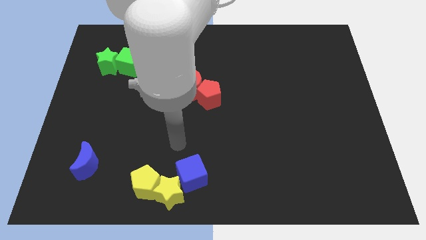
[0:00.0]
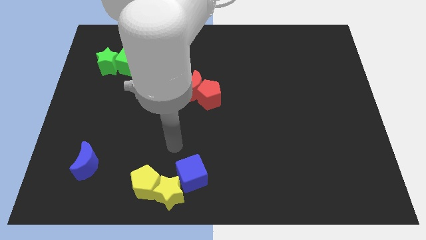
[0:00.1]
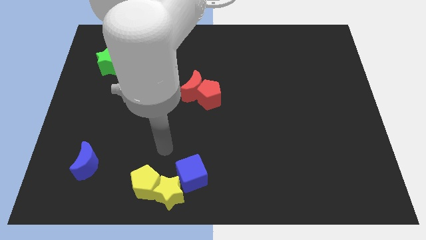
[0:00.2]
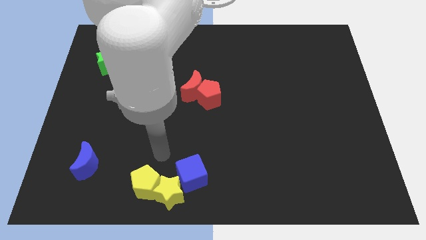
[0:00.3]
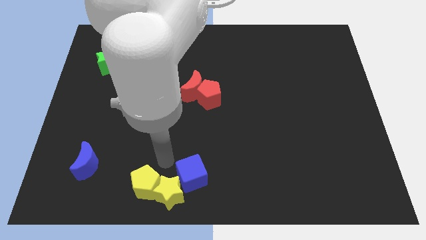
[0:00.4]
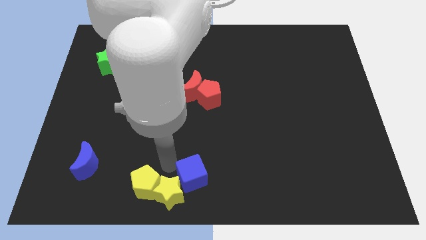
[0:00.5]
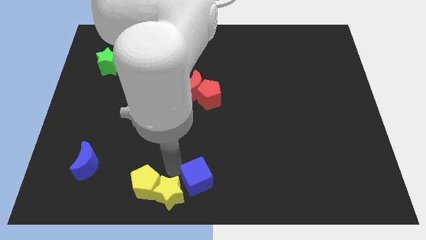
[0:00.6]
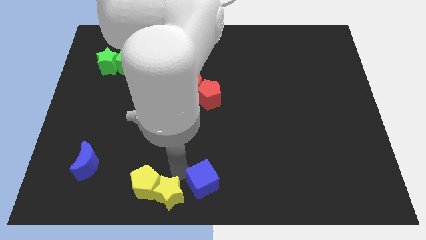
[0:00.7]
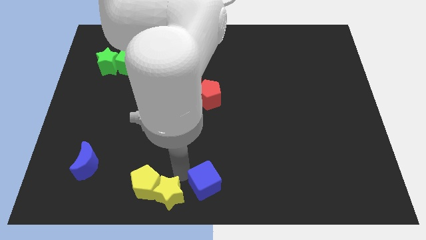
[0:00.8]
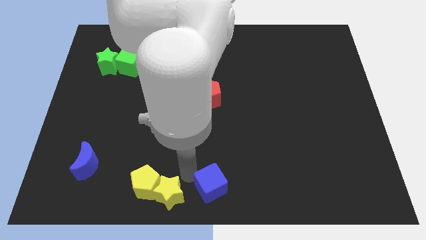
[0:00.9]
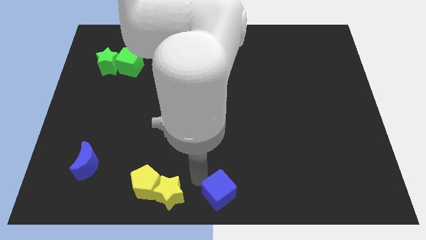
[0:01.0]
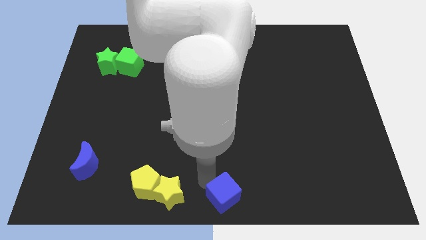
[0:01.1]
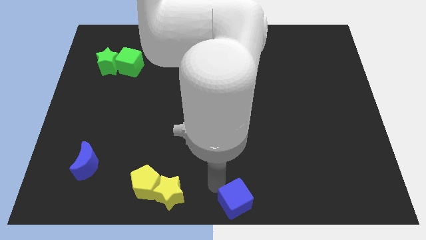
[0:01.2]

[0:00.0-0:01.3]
place the blue cube at bottom center of the board

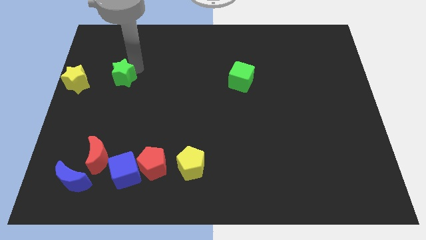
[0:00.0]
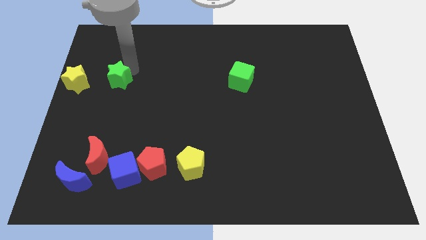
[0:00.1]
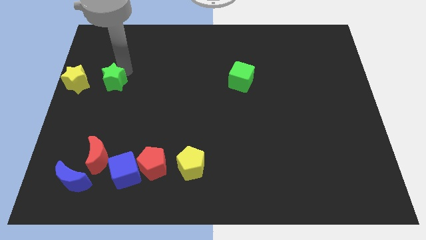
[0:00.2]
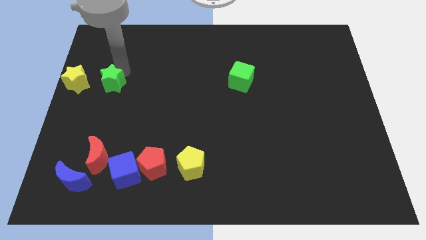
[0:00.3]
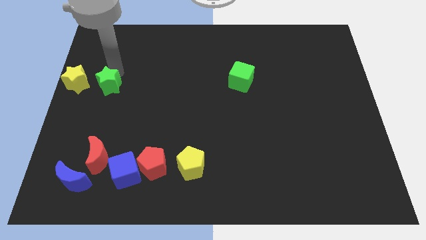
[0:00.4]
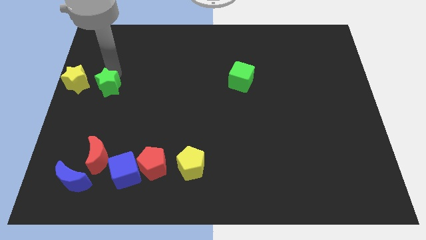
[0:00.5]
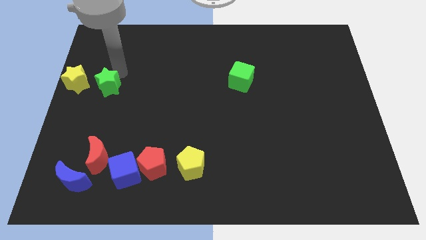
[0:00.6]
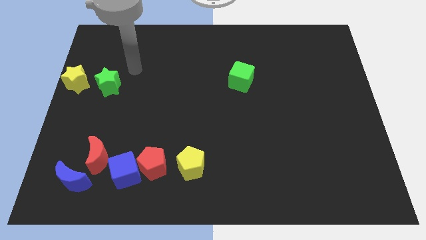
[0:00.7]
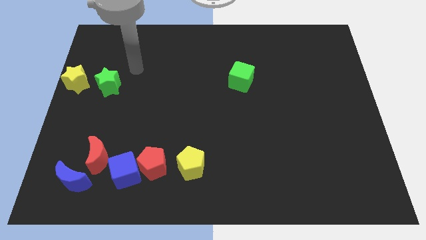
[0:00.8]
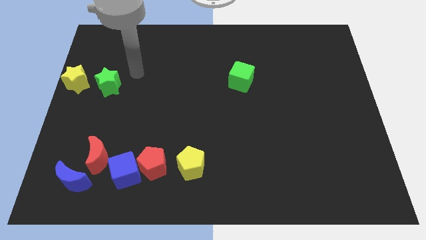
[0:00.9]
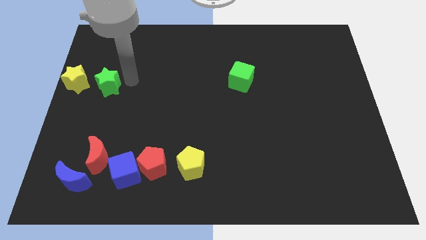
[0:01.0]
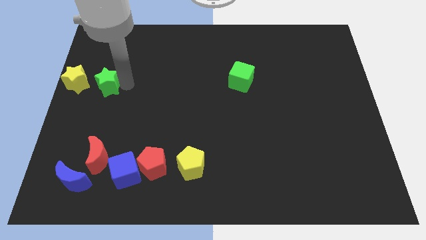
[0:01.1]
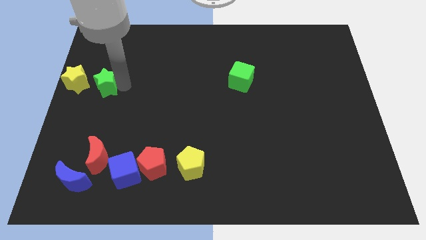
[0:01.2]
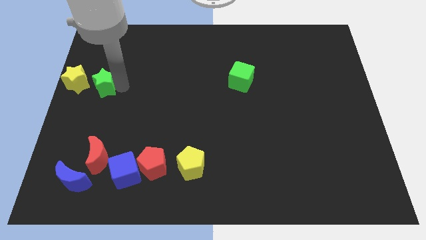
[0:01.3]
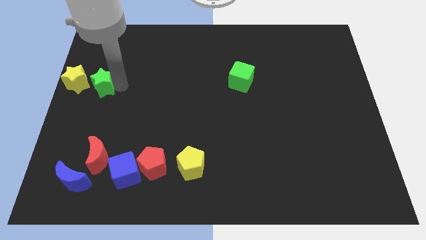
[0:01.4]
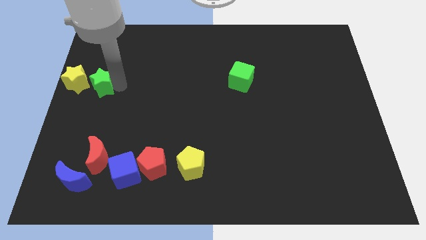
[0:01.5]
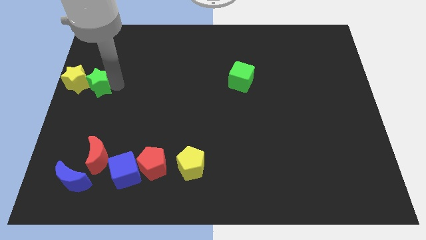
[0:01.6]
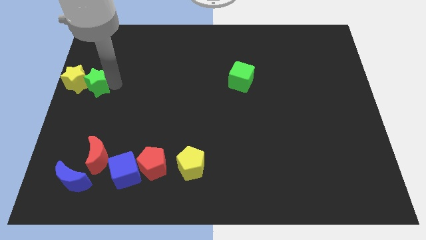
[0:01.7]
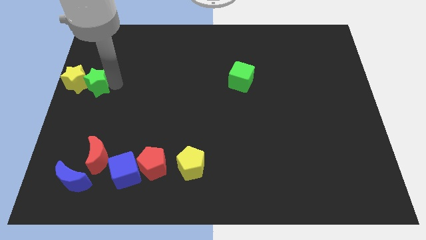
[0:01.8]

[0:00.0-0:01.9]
move the green star into right side of the yellow star

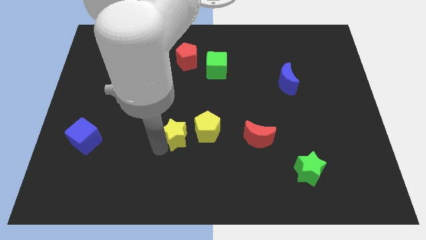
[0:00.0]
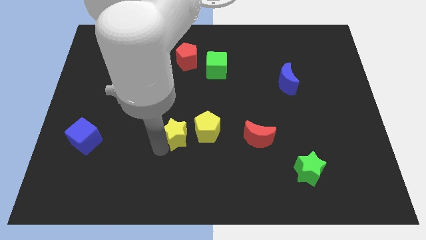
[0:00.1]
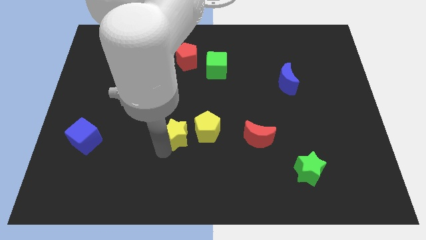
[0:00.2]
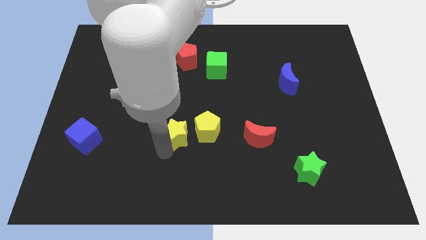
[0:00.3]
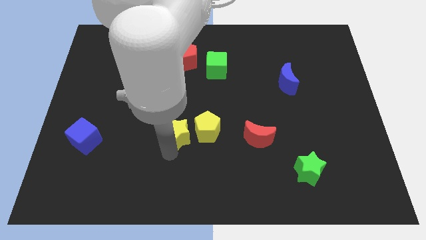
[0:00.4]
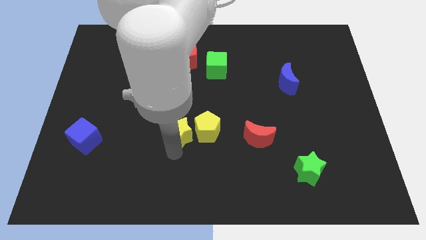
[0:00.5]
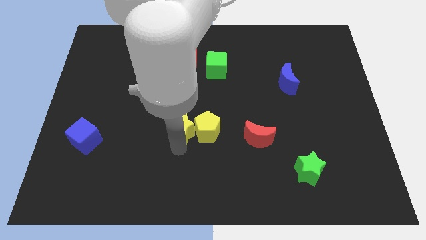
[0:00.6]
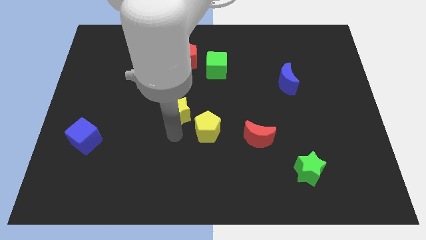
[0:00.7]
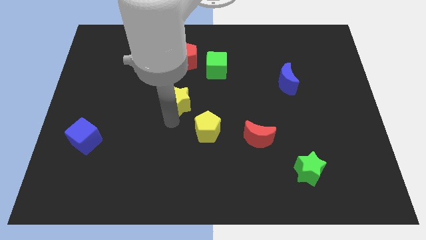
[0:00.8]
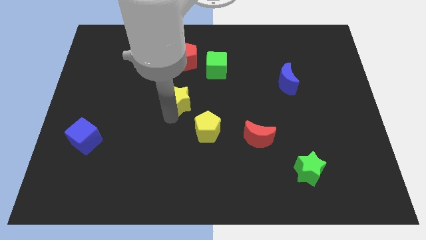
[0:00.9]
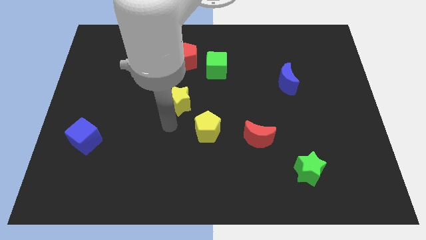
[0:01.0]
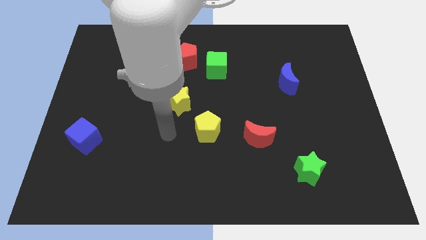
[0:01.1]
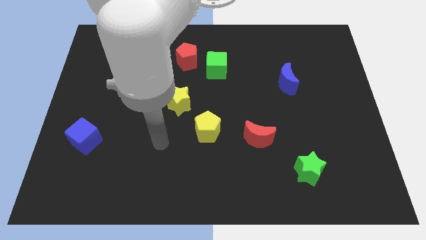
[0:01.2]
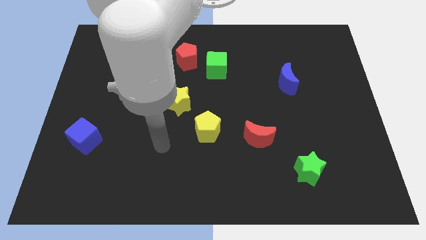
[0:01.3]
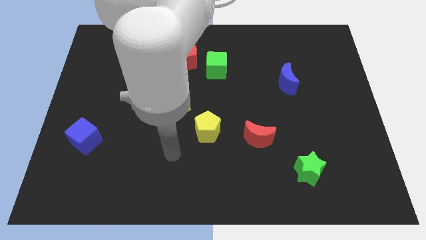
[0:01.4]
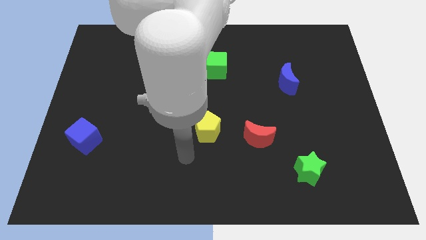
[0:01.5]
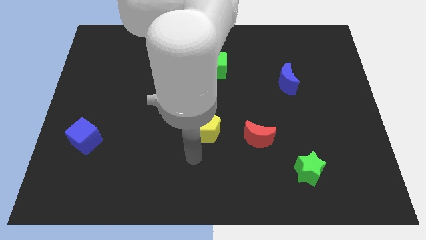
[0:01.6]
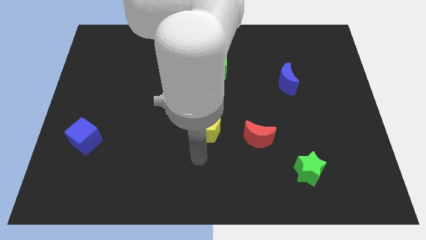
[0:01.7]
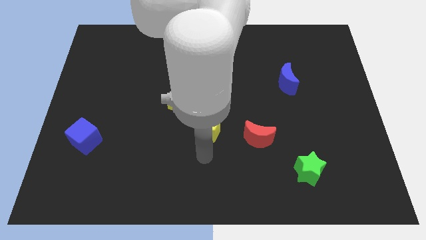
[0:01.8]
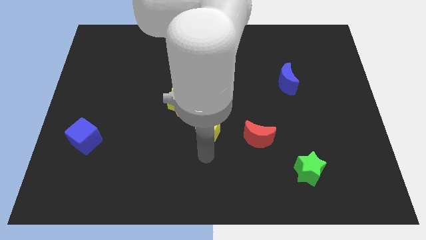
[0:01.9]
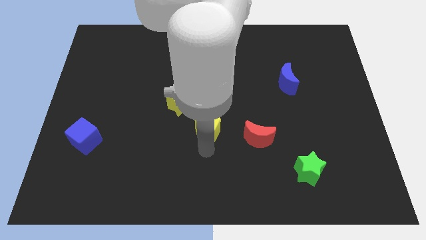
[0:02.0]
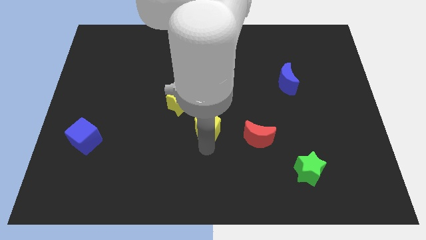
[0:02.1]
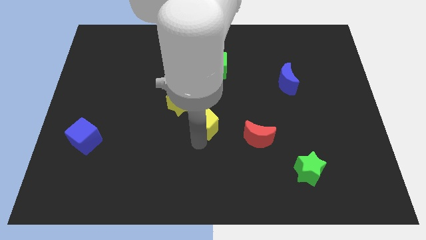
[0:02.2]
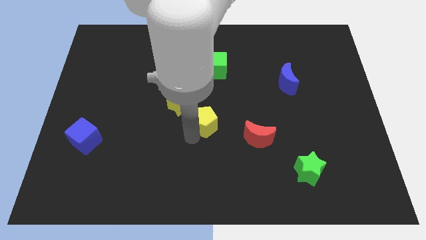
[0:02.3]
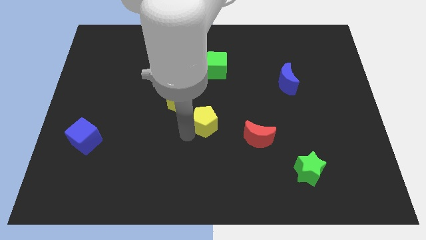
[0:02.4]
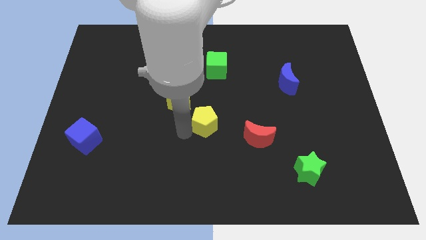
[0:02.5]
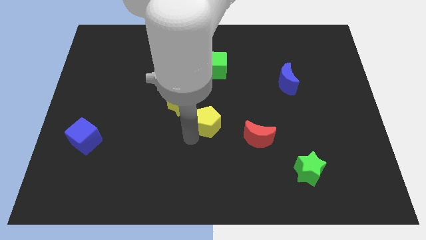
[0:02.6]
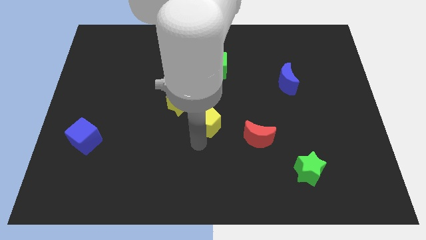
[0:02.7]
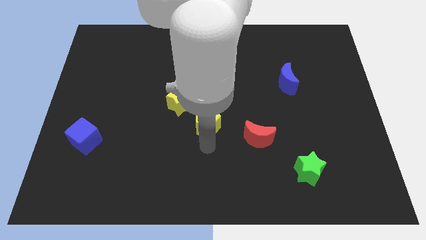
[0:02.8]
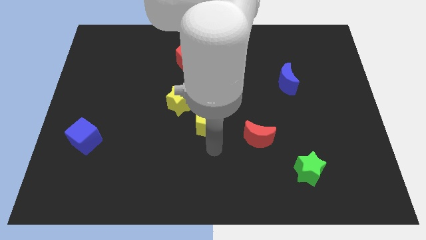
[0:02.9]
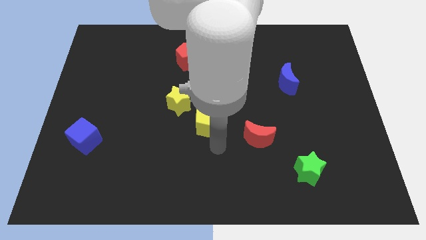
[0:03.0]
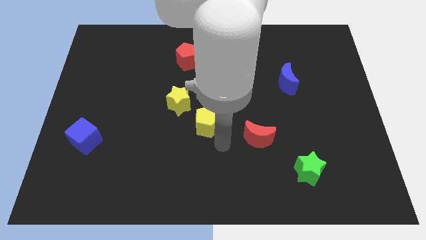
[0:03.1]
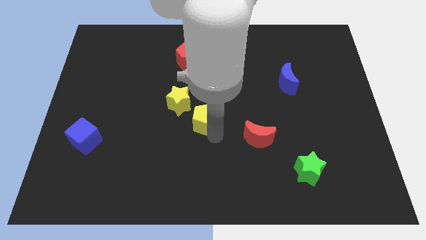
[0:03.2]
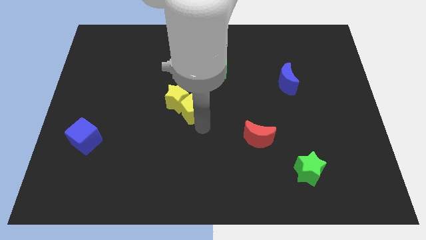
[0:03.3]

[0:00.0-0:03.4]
push the yellow pentagon into the yellow star

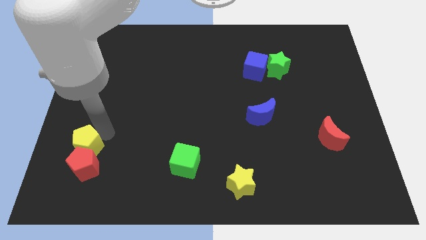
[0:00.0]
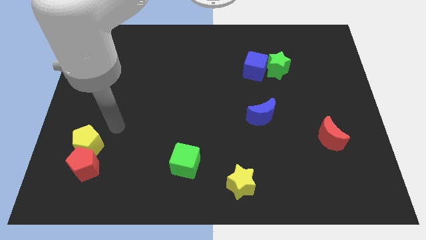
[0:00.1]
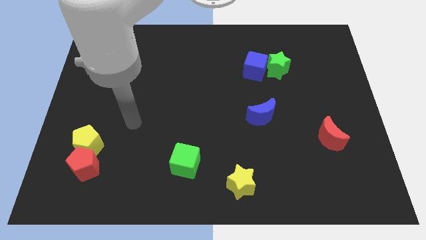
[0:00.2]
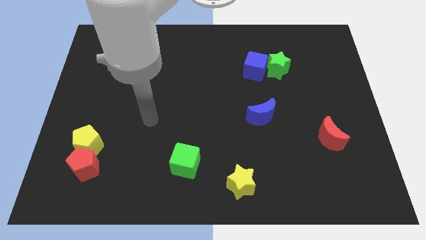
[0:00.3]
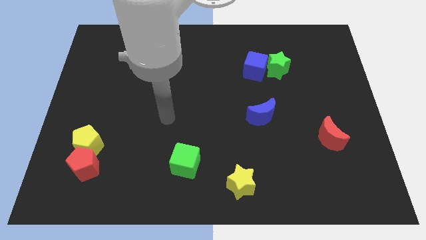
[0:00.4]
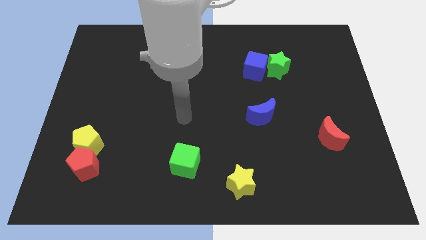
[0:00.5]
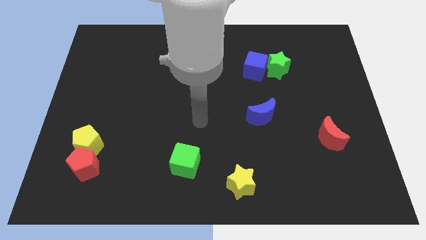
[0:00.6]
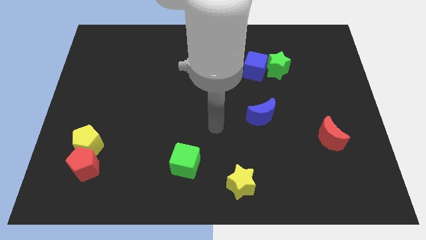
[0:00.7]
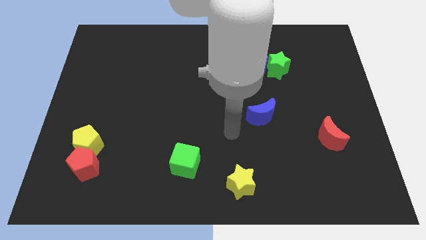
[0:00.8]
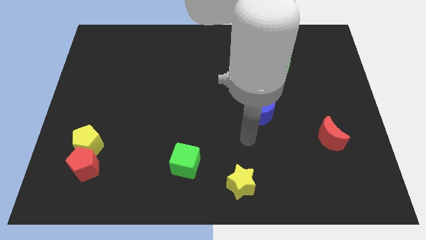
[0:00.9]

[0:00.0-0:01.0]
move your arm away from yellow pentagon

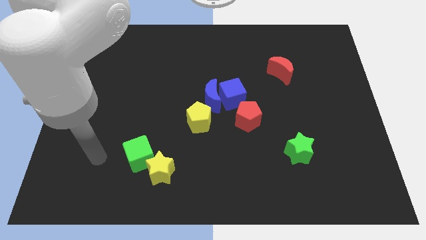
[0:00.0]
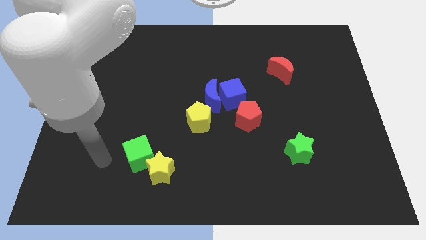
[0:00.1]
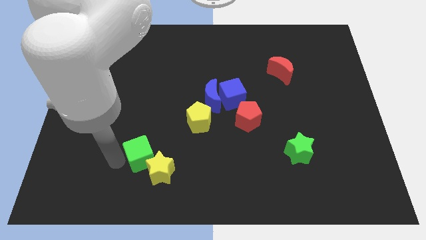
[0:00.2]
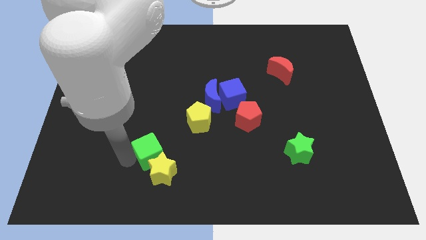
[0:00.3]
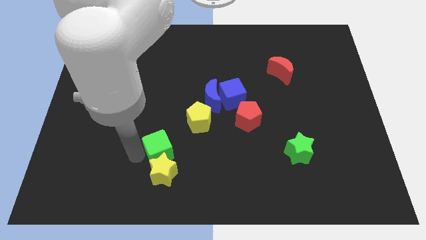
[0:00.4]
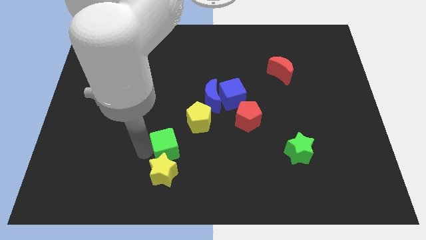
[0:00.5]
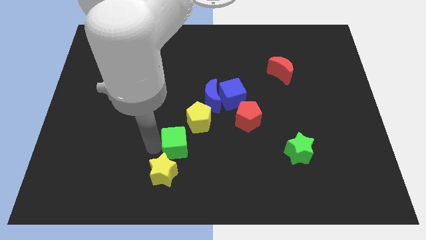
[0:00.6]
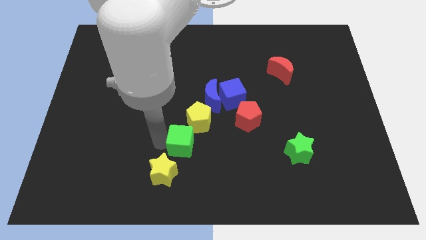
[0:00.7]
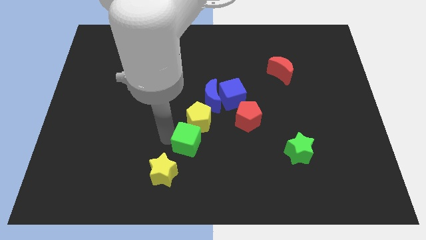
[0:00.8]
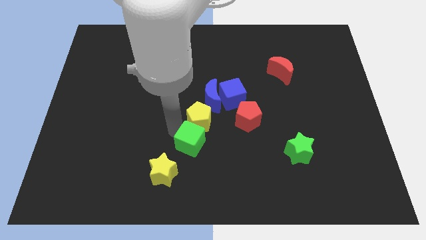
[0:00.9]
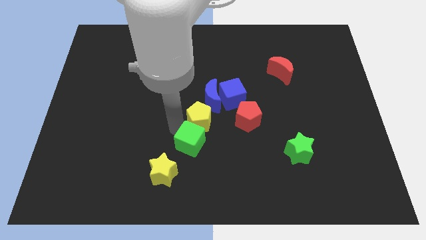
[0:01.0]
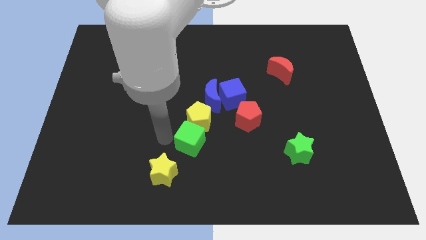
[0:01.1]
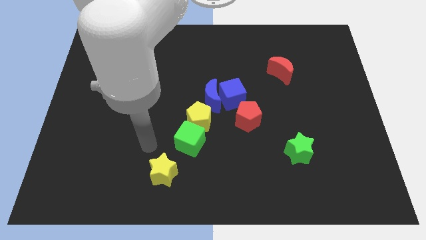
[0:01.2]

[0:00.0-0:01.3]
push the green cube into the yellow pentagon

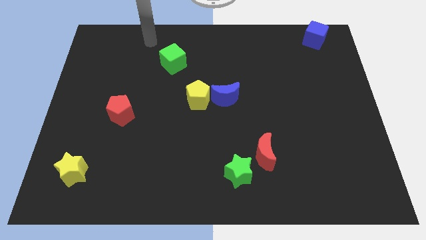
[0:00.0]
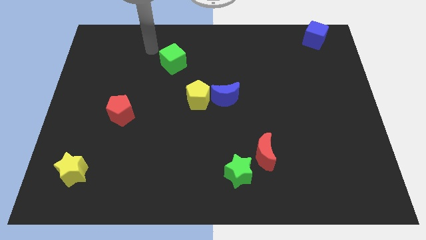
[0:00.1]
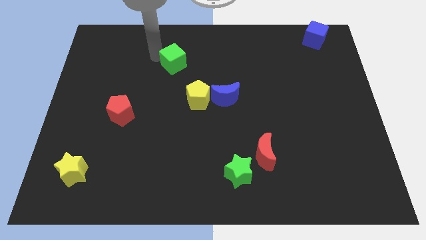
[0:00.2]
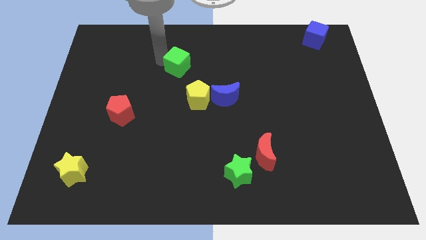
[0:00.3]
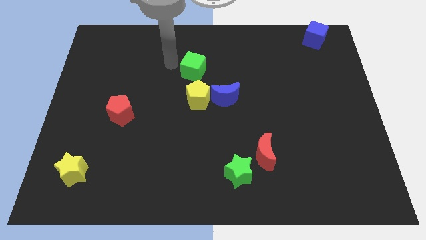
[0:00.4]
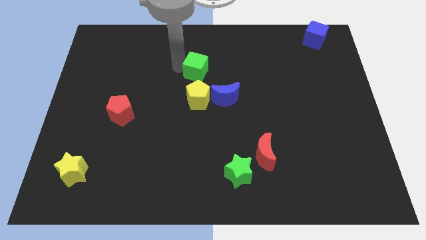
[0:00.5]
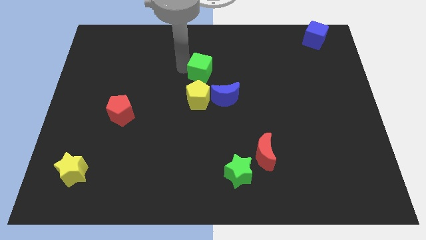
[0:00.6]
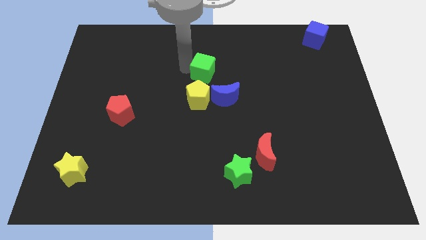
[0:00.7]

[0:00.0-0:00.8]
place green cube above yellow pentagon
